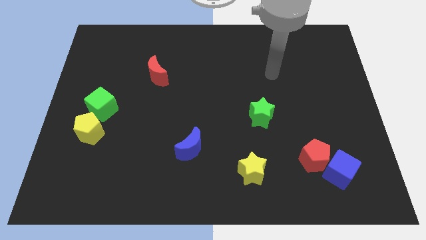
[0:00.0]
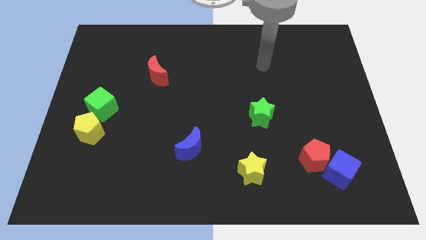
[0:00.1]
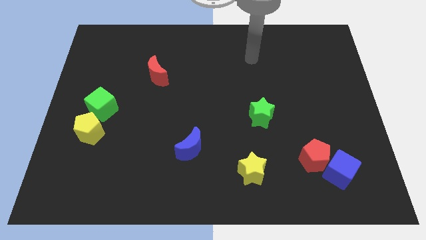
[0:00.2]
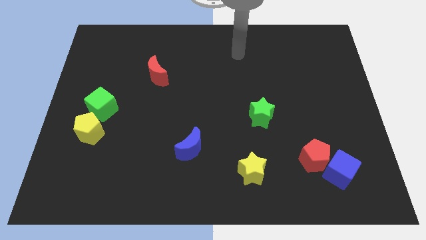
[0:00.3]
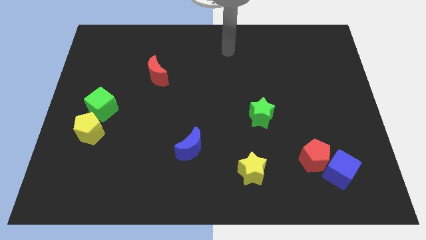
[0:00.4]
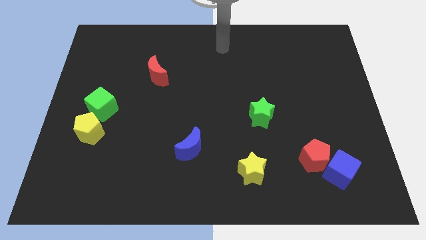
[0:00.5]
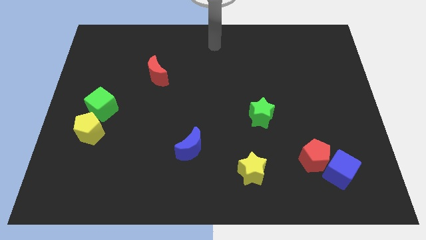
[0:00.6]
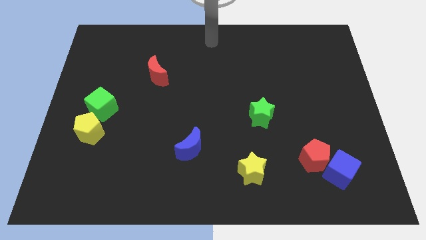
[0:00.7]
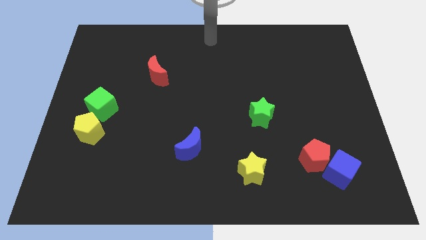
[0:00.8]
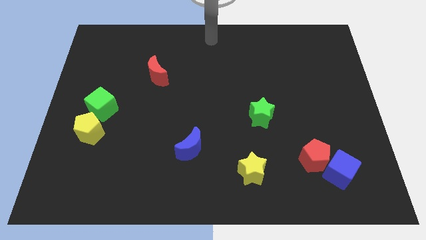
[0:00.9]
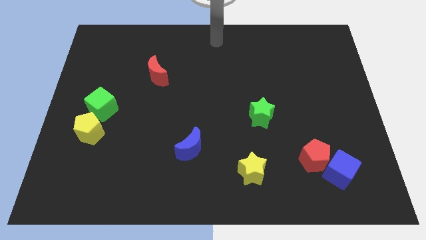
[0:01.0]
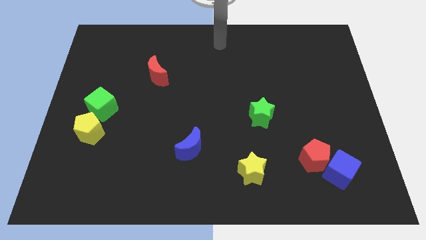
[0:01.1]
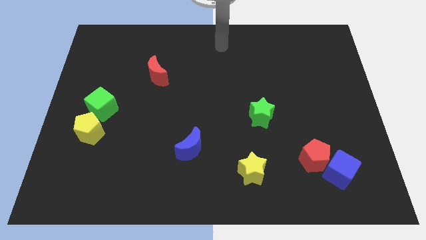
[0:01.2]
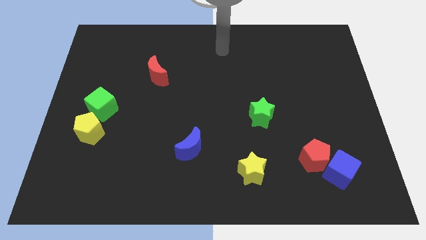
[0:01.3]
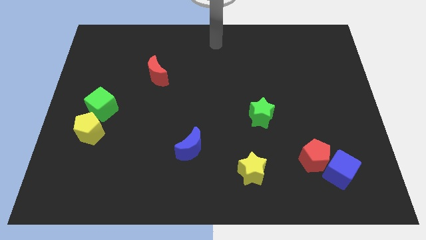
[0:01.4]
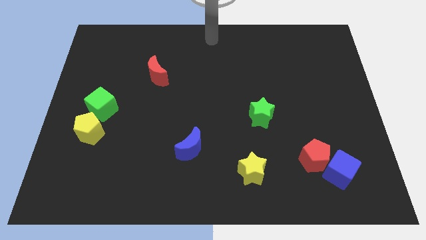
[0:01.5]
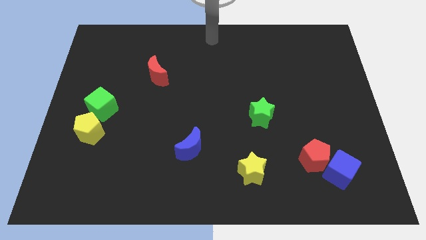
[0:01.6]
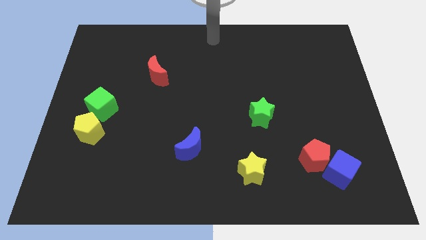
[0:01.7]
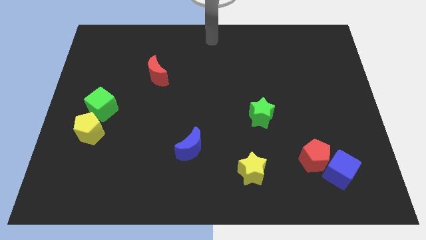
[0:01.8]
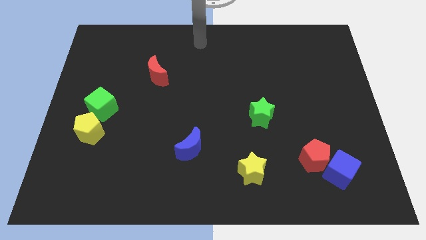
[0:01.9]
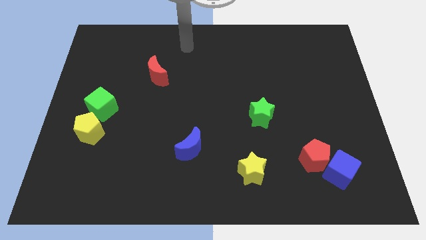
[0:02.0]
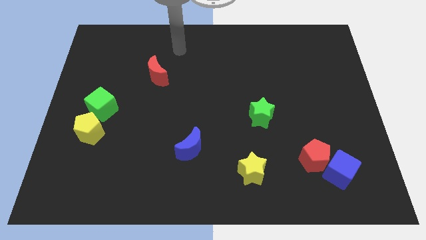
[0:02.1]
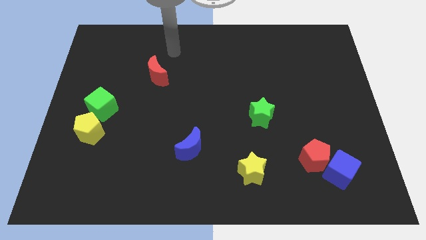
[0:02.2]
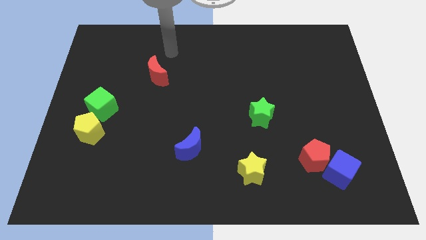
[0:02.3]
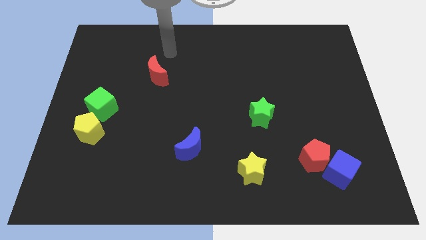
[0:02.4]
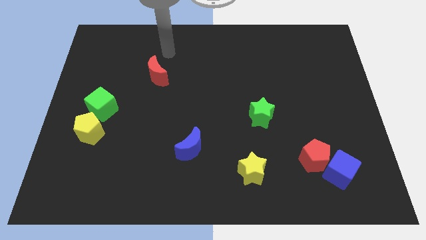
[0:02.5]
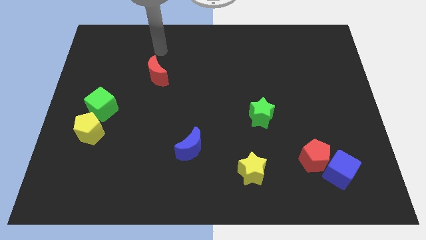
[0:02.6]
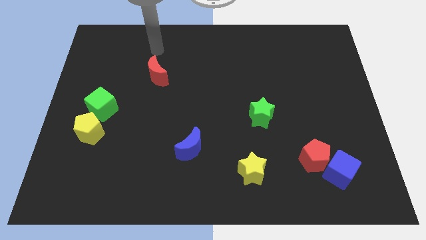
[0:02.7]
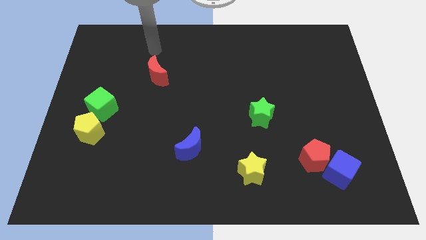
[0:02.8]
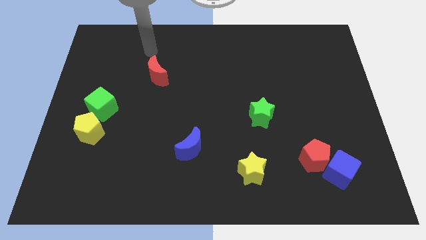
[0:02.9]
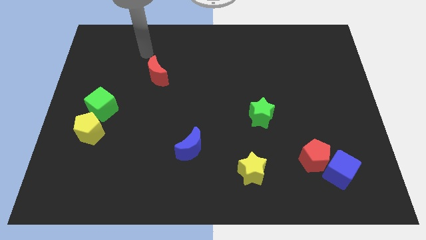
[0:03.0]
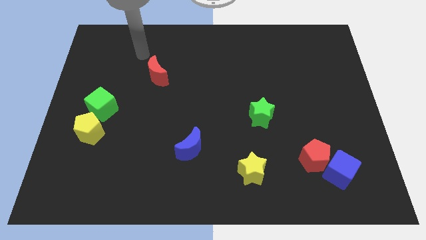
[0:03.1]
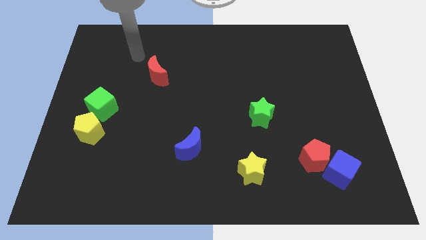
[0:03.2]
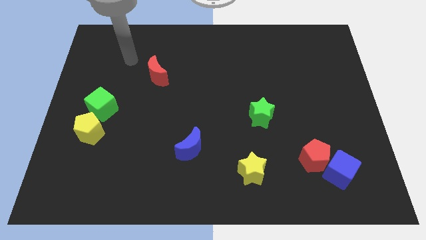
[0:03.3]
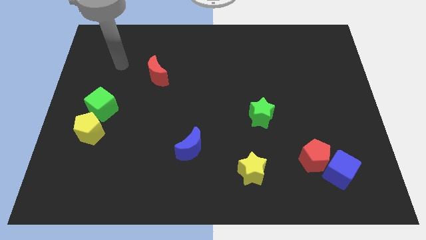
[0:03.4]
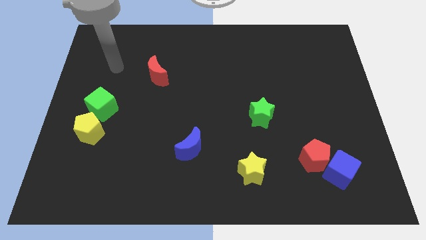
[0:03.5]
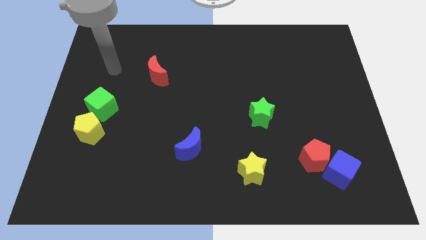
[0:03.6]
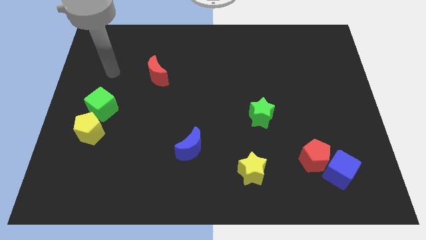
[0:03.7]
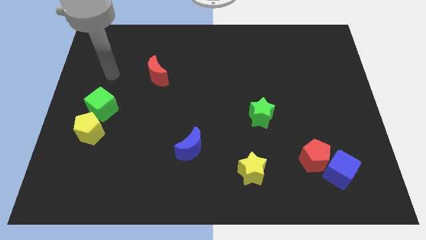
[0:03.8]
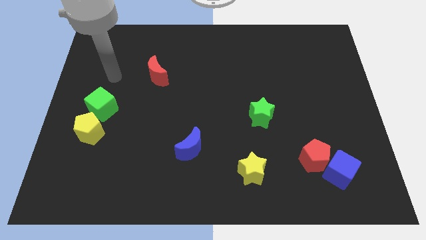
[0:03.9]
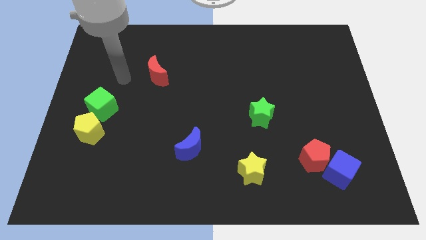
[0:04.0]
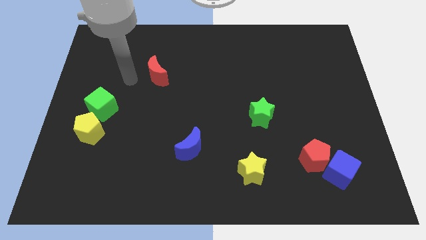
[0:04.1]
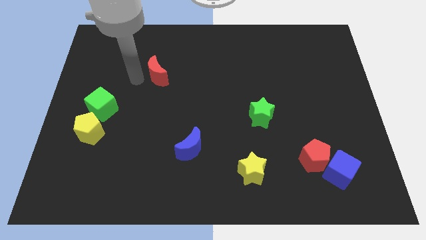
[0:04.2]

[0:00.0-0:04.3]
move your arm towards the left side of the red crescent

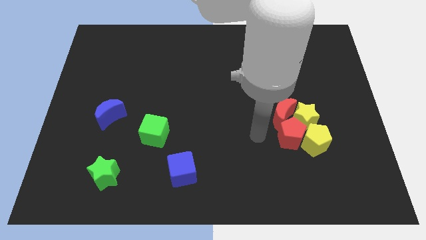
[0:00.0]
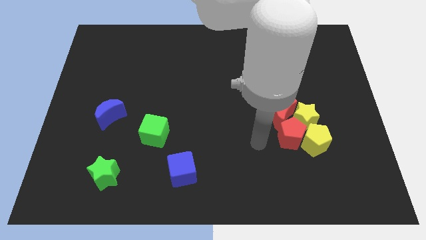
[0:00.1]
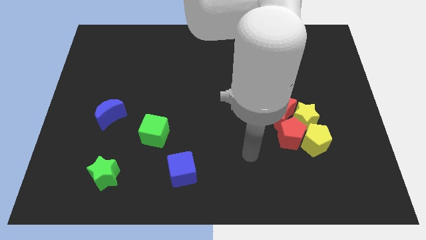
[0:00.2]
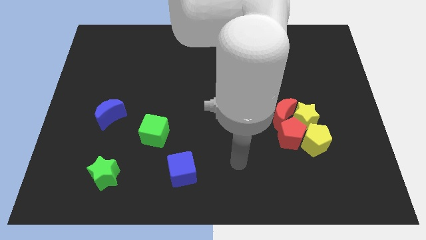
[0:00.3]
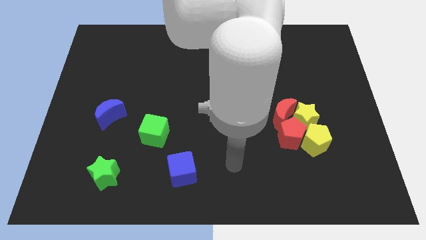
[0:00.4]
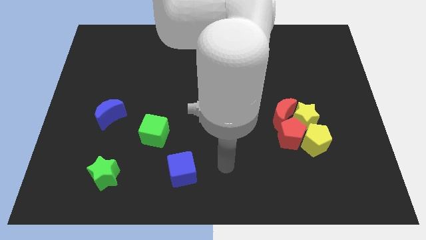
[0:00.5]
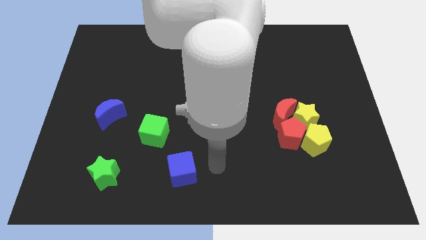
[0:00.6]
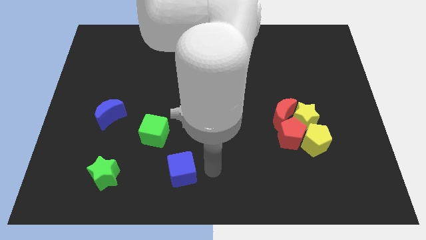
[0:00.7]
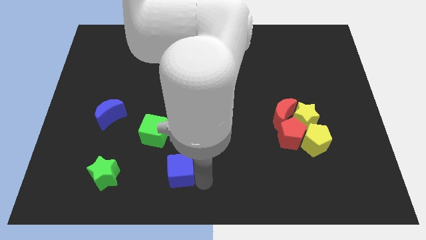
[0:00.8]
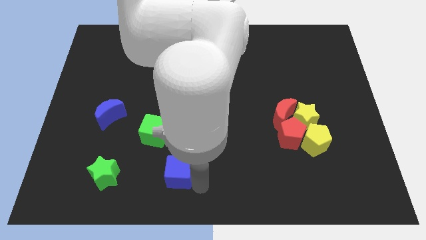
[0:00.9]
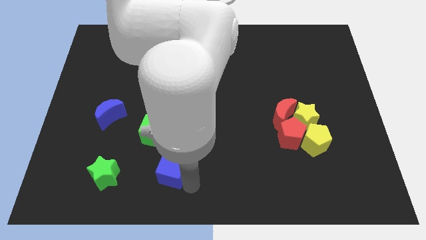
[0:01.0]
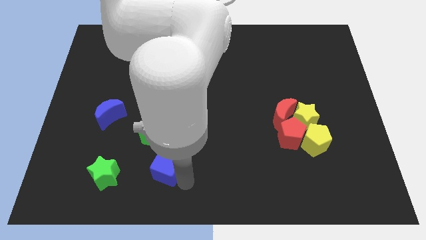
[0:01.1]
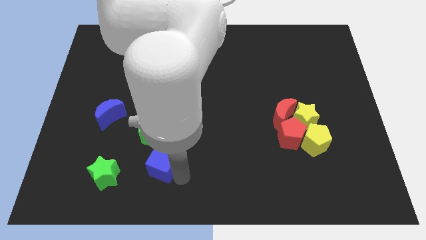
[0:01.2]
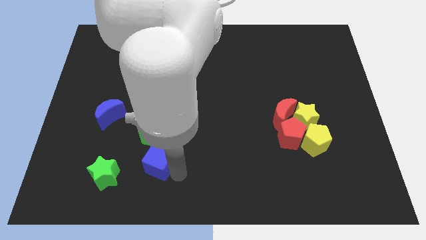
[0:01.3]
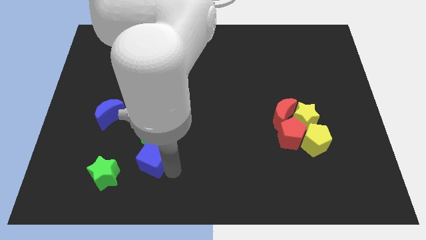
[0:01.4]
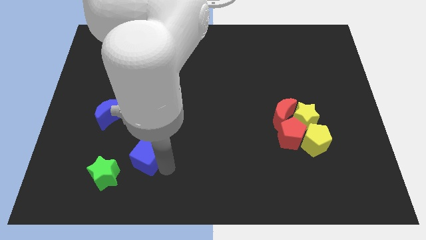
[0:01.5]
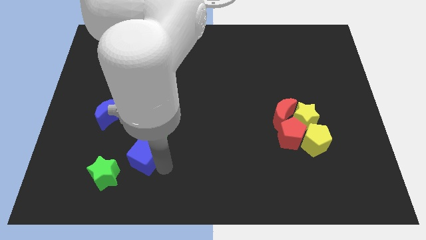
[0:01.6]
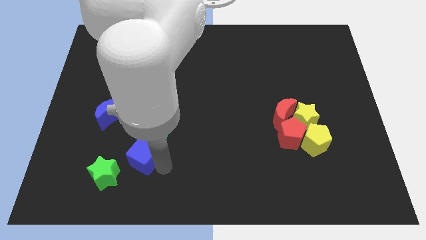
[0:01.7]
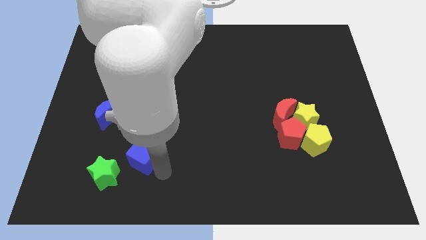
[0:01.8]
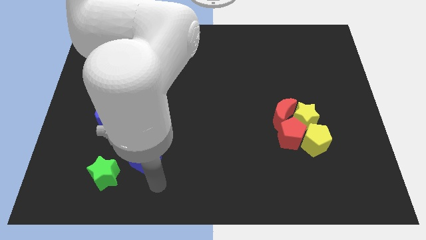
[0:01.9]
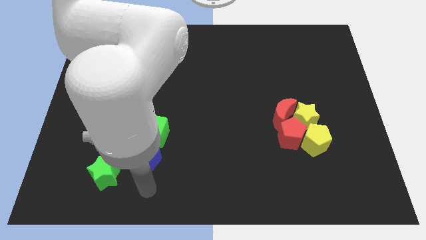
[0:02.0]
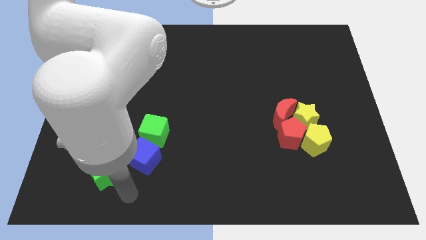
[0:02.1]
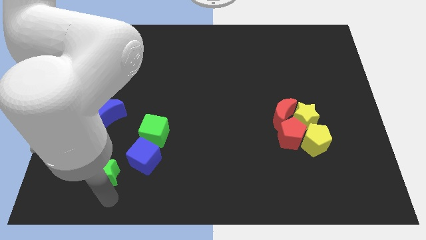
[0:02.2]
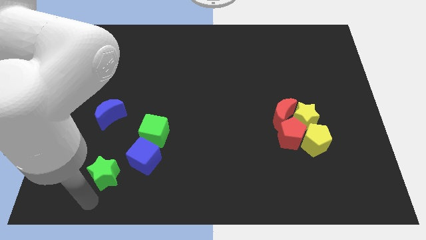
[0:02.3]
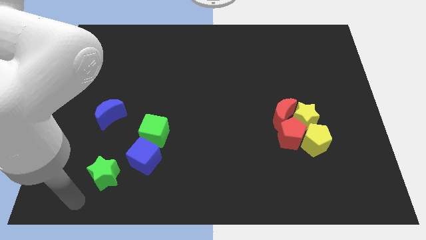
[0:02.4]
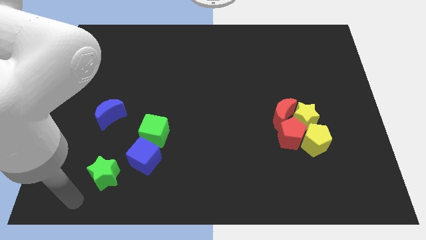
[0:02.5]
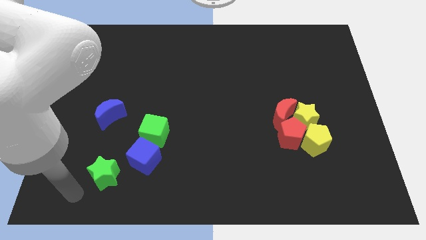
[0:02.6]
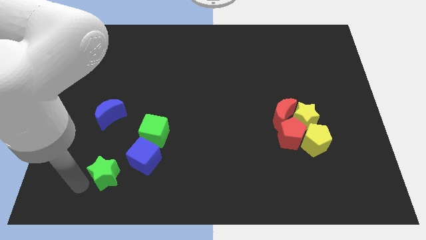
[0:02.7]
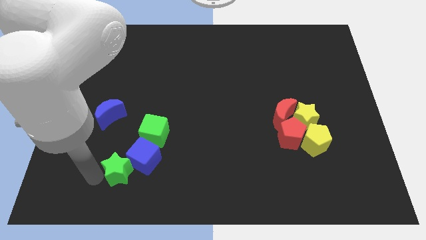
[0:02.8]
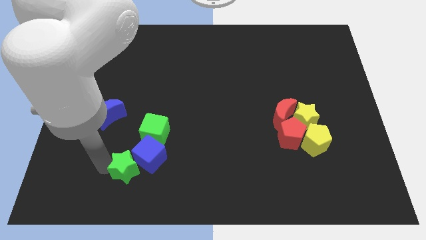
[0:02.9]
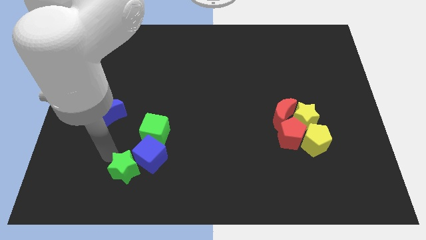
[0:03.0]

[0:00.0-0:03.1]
place the blue cube below the green cube

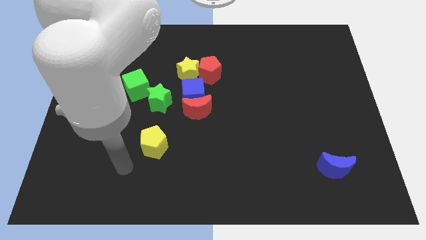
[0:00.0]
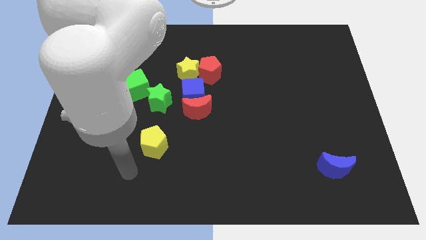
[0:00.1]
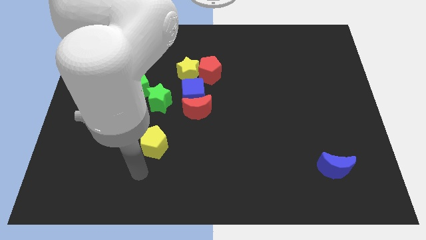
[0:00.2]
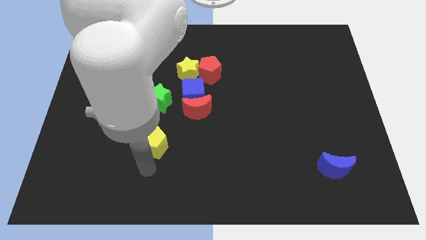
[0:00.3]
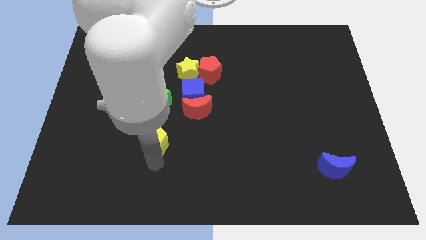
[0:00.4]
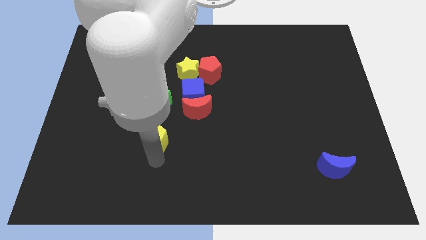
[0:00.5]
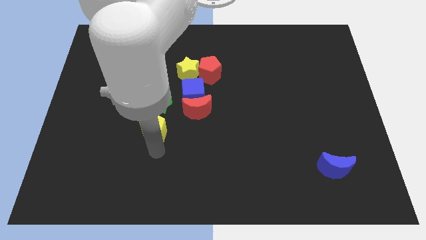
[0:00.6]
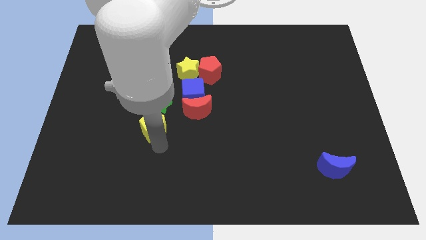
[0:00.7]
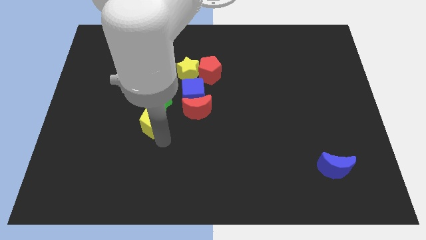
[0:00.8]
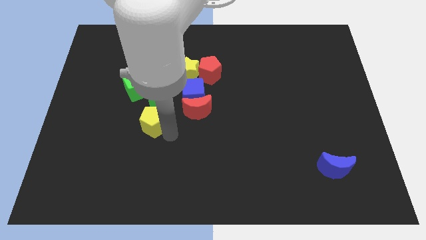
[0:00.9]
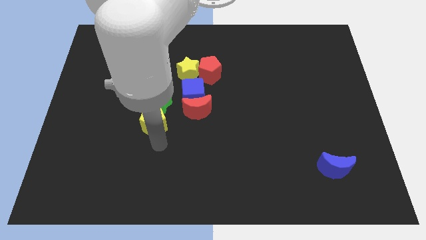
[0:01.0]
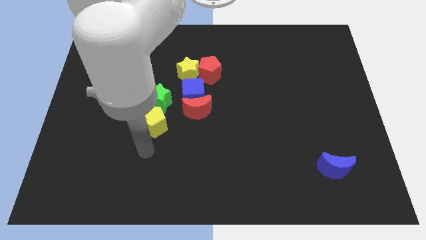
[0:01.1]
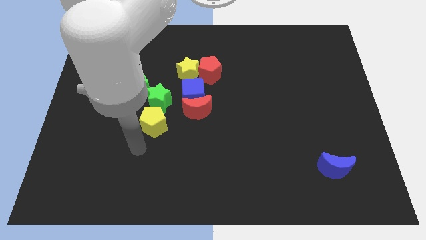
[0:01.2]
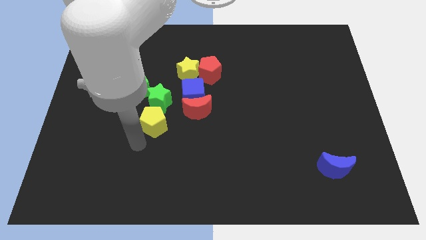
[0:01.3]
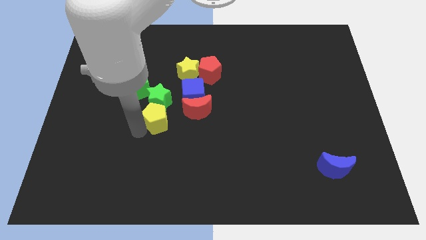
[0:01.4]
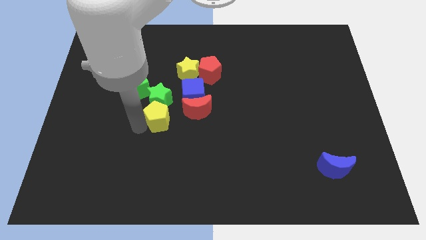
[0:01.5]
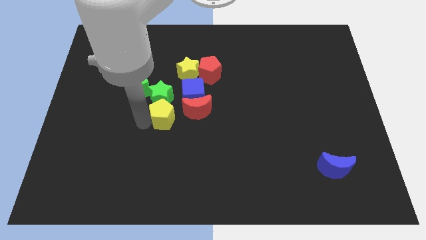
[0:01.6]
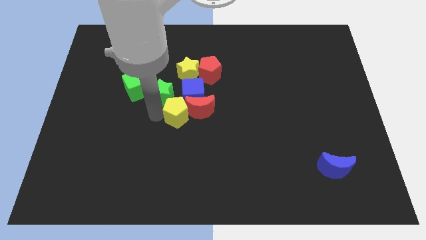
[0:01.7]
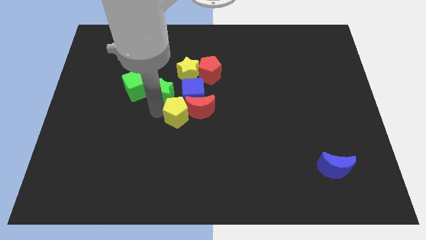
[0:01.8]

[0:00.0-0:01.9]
push the yellow pentagon into the red moon
